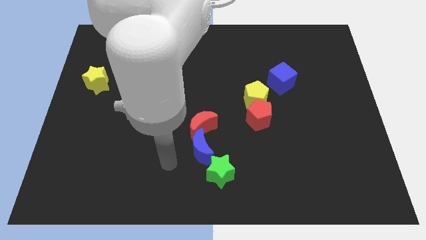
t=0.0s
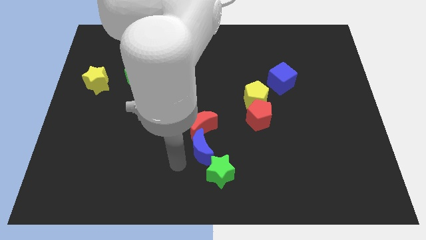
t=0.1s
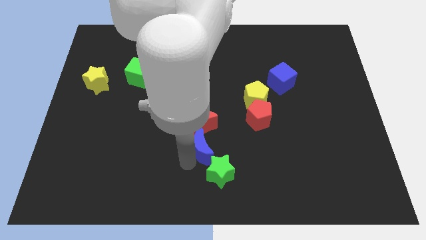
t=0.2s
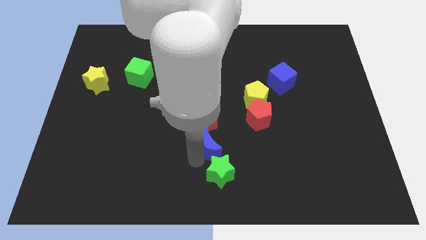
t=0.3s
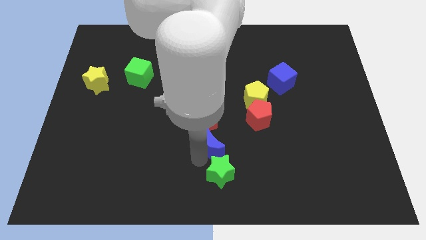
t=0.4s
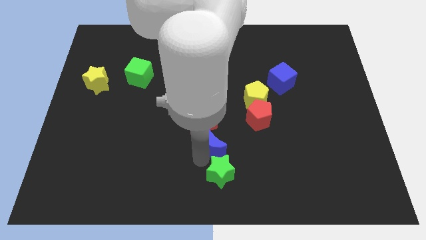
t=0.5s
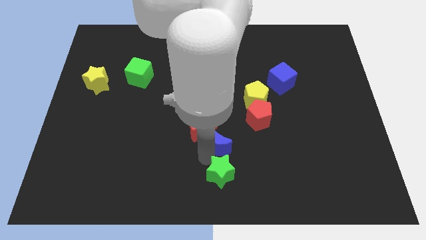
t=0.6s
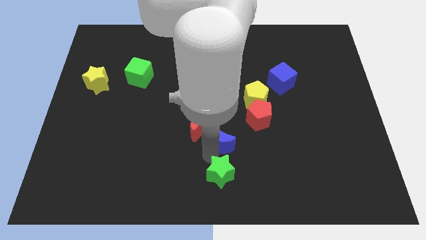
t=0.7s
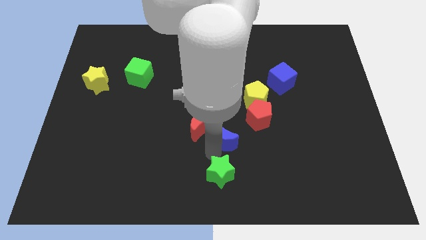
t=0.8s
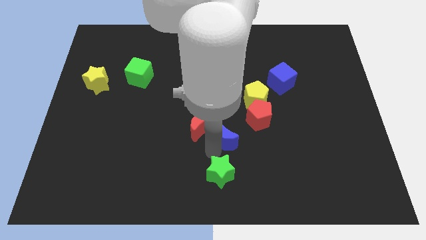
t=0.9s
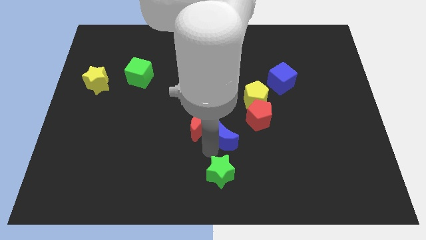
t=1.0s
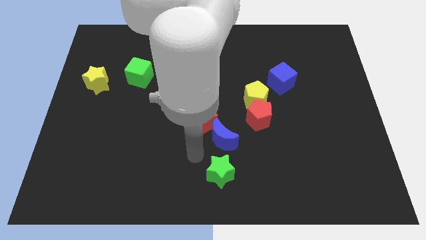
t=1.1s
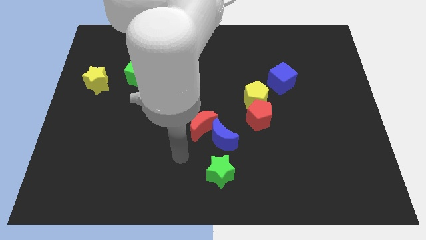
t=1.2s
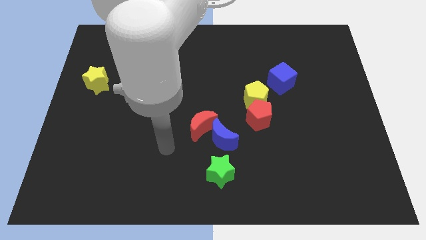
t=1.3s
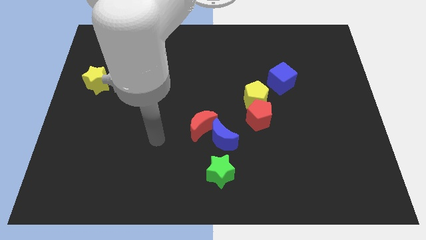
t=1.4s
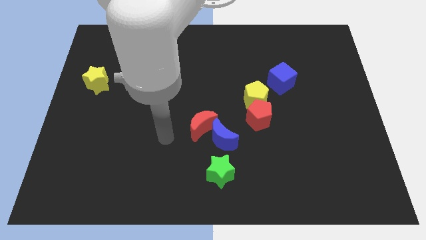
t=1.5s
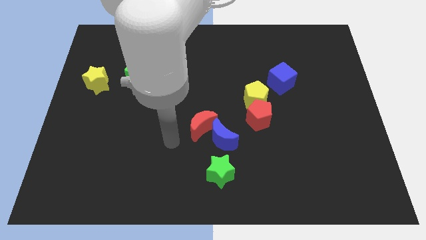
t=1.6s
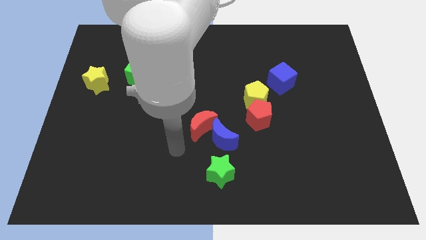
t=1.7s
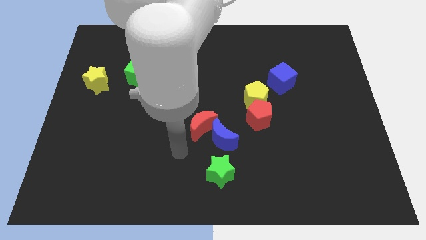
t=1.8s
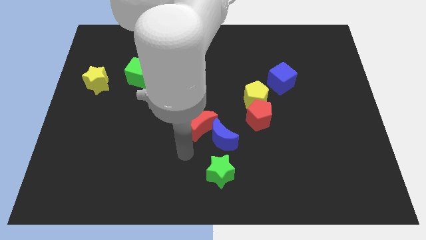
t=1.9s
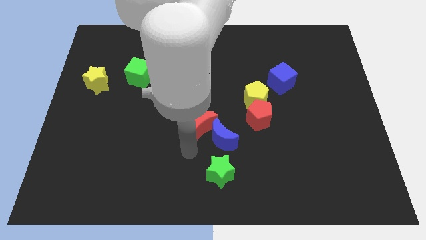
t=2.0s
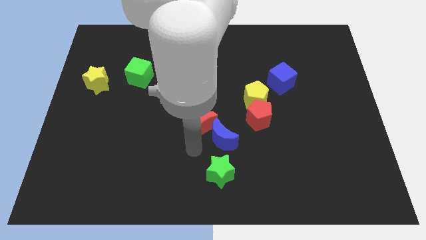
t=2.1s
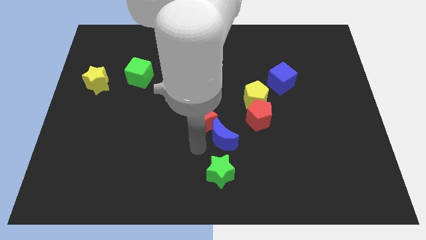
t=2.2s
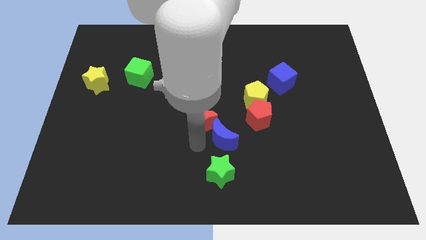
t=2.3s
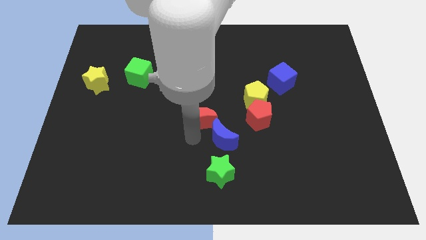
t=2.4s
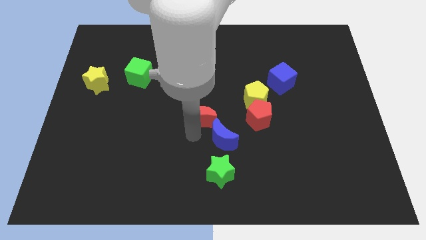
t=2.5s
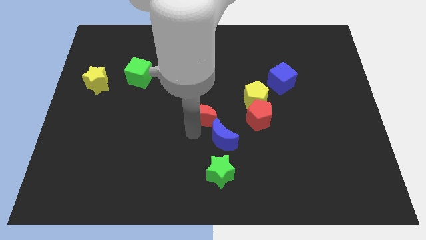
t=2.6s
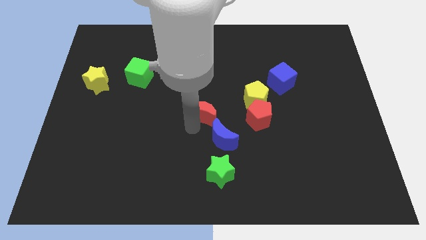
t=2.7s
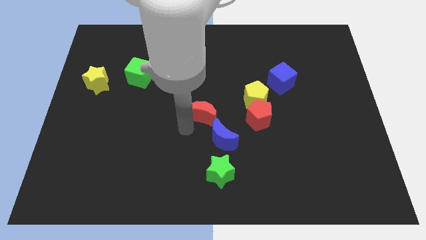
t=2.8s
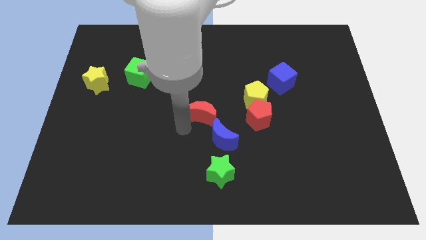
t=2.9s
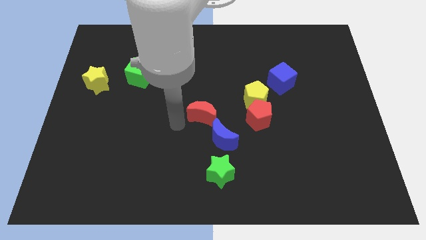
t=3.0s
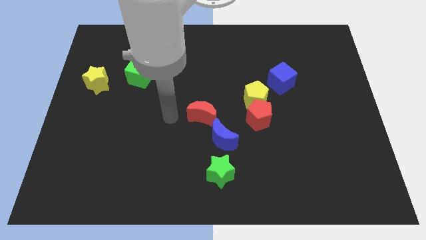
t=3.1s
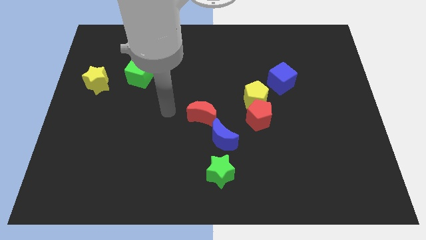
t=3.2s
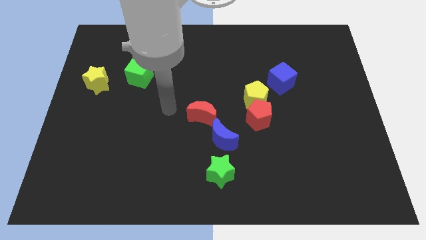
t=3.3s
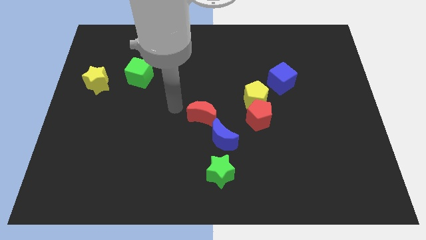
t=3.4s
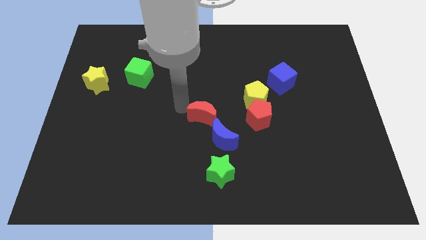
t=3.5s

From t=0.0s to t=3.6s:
put the blue moon vertically above the green star

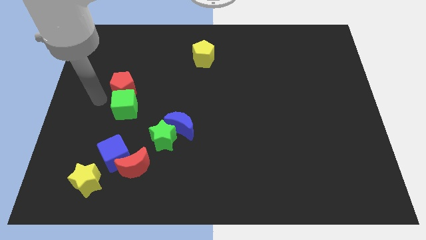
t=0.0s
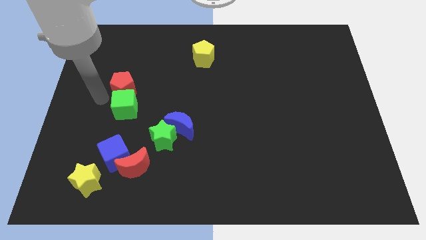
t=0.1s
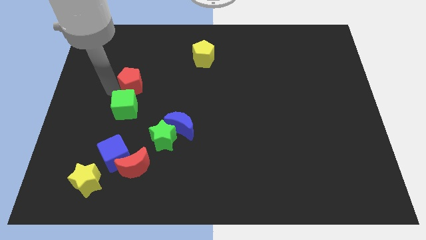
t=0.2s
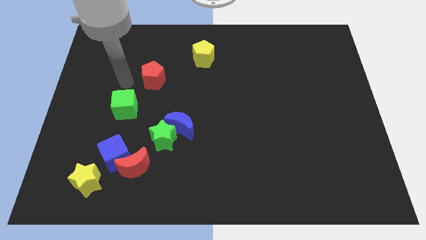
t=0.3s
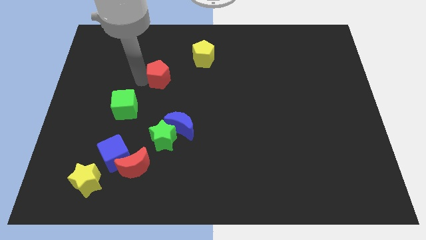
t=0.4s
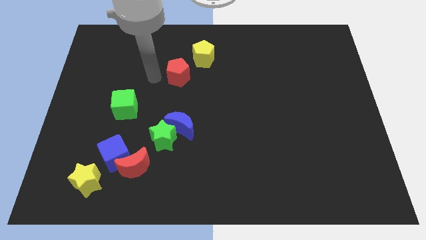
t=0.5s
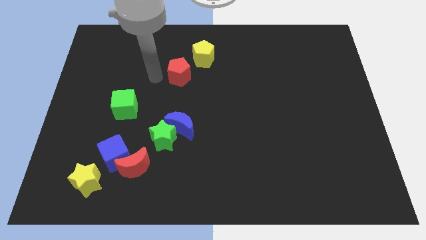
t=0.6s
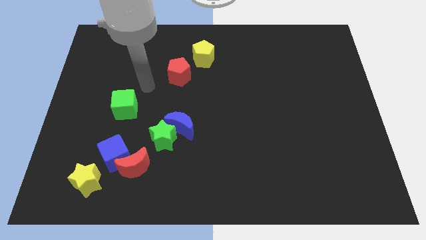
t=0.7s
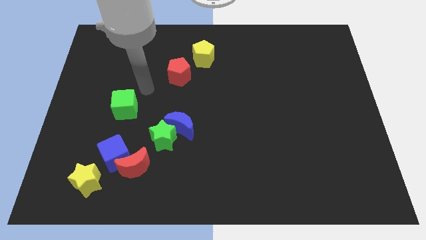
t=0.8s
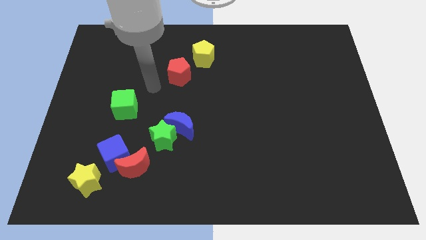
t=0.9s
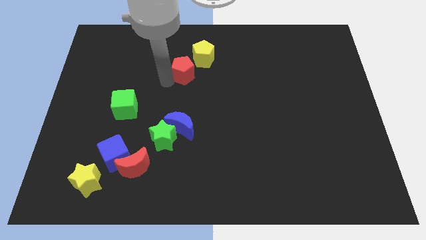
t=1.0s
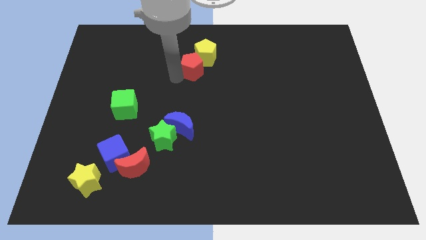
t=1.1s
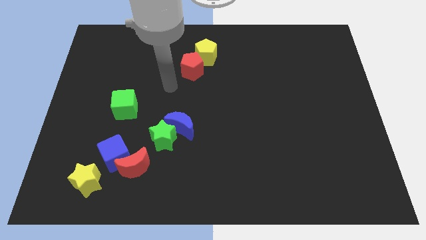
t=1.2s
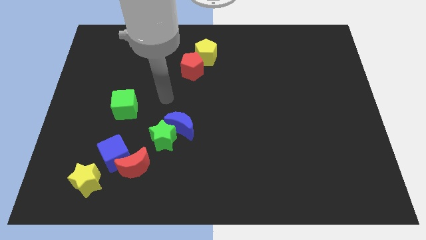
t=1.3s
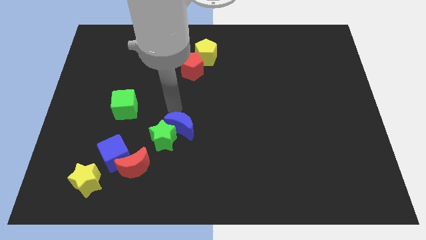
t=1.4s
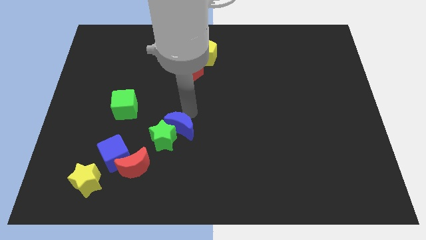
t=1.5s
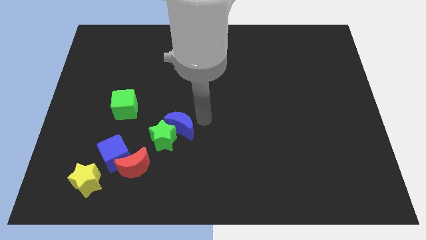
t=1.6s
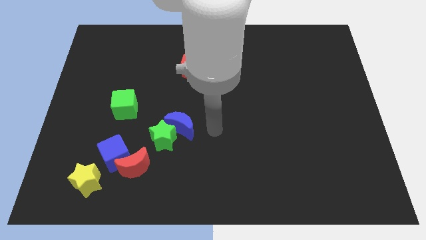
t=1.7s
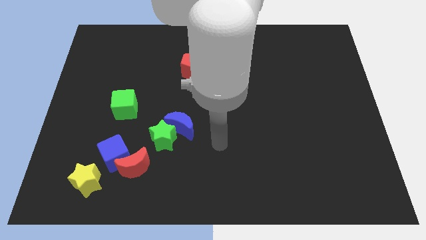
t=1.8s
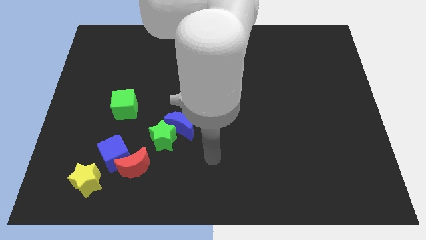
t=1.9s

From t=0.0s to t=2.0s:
push the red pentagon diagonal below into the yellow pentagon

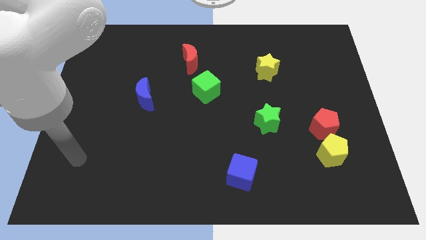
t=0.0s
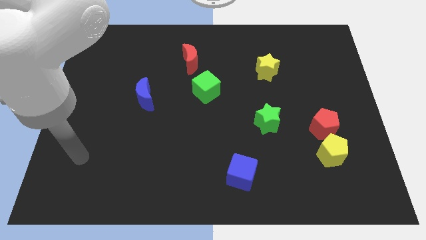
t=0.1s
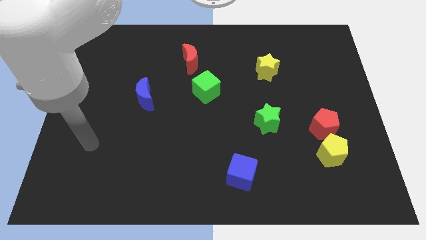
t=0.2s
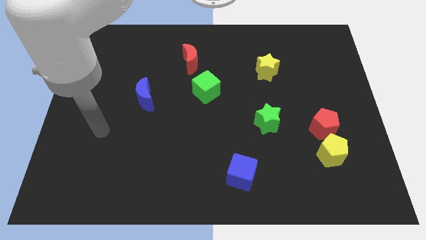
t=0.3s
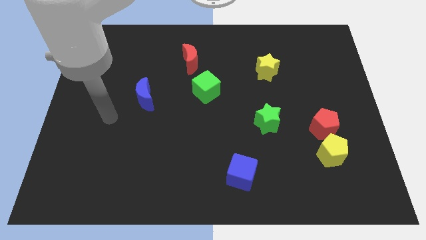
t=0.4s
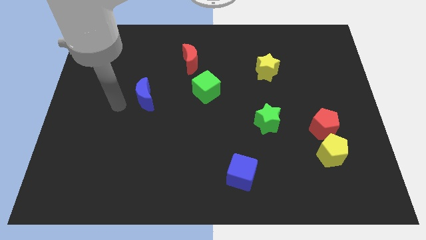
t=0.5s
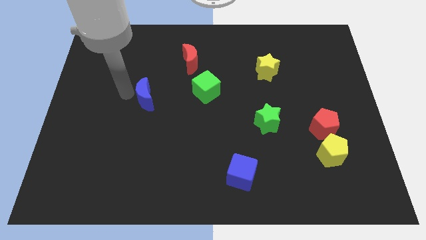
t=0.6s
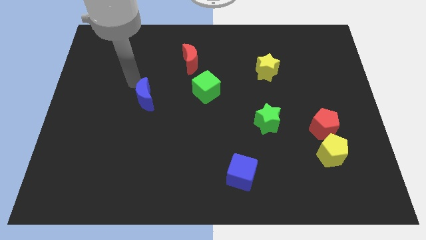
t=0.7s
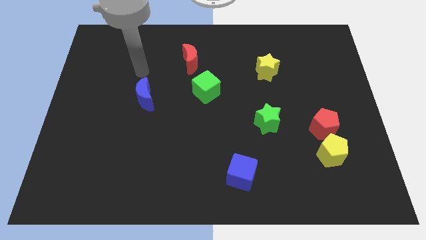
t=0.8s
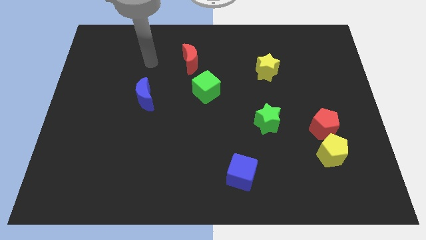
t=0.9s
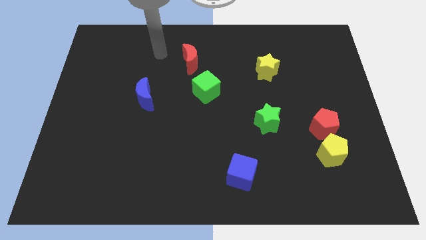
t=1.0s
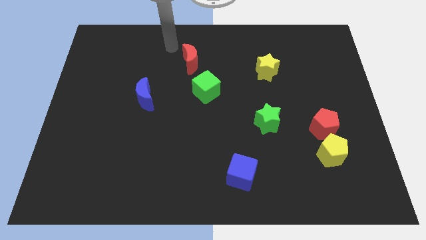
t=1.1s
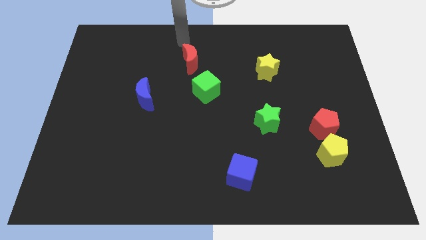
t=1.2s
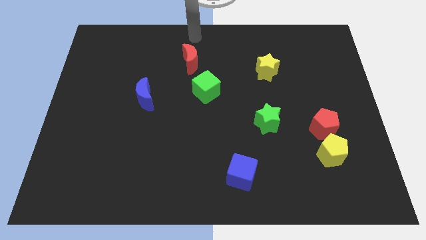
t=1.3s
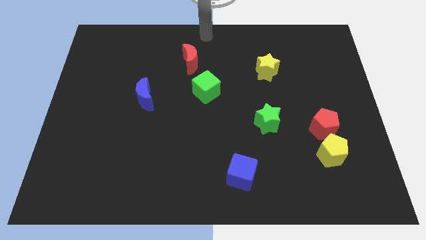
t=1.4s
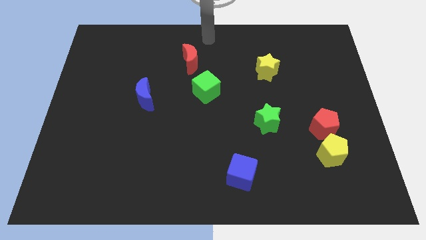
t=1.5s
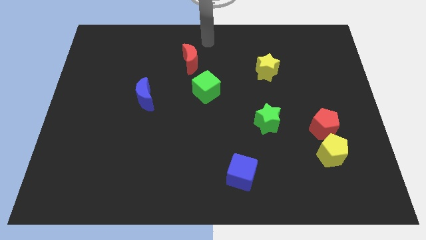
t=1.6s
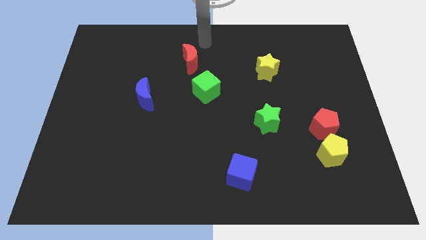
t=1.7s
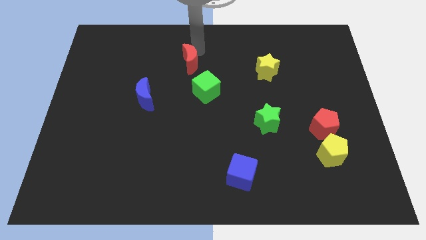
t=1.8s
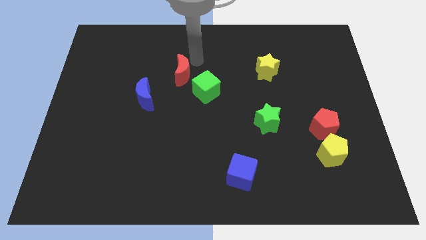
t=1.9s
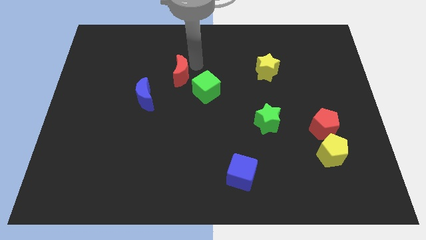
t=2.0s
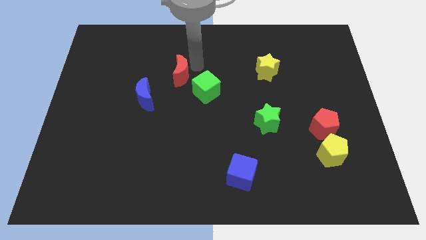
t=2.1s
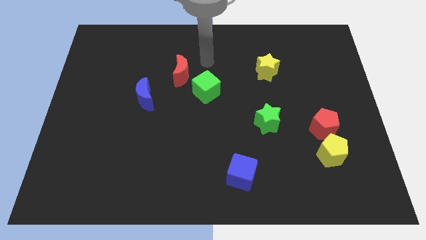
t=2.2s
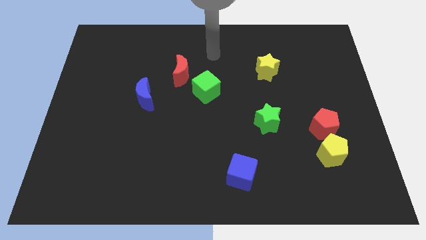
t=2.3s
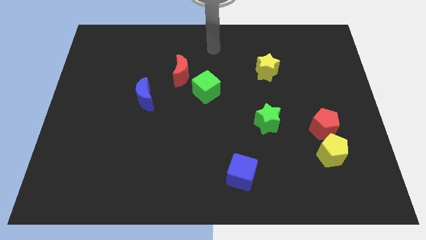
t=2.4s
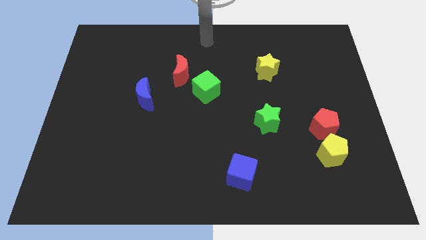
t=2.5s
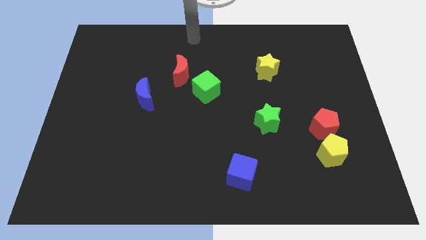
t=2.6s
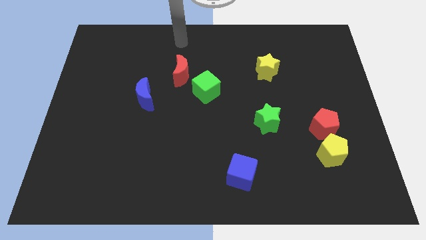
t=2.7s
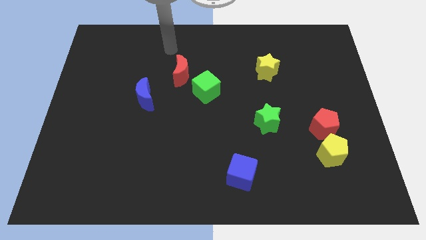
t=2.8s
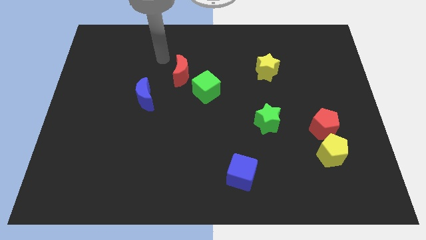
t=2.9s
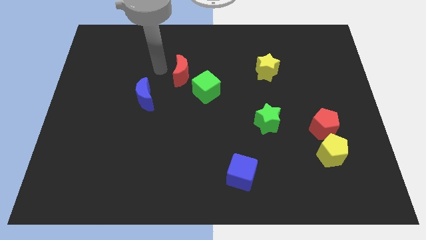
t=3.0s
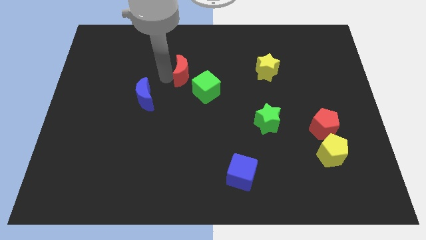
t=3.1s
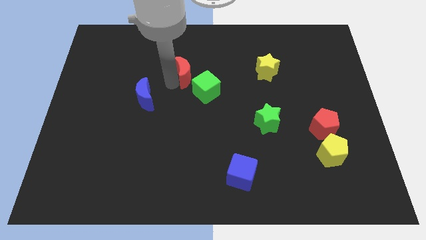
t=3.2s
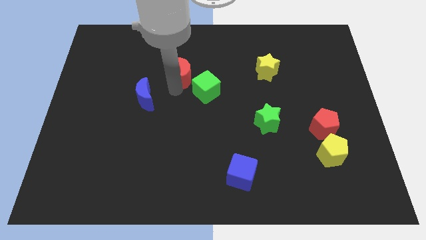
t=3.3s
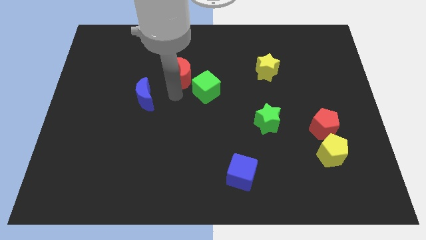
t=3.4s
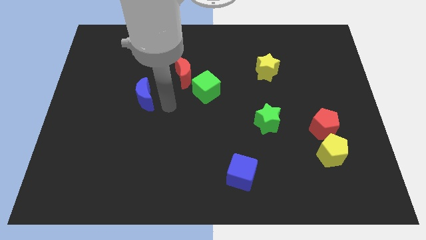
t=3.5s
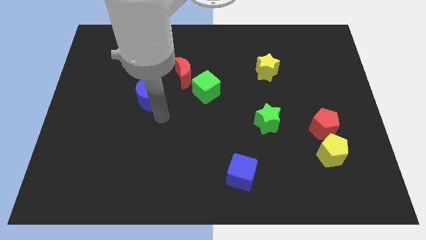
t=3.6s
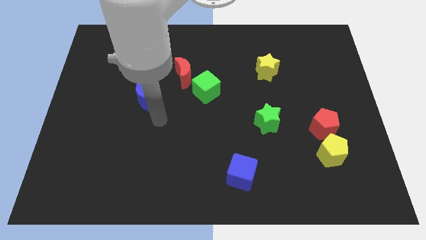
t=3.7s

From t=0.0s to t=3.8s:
slightly push the red crescent to the right of the board
